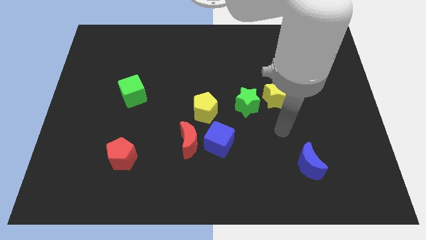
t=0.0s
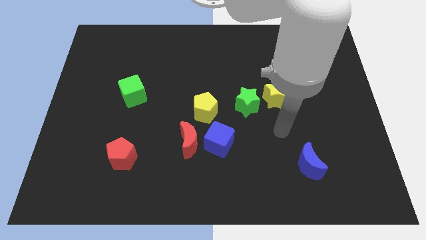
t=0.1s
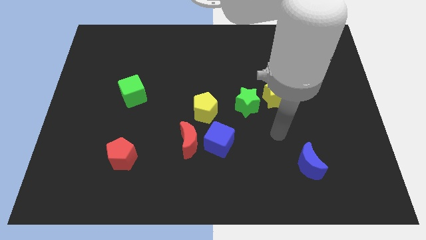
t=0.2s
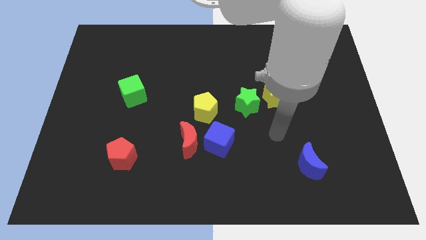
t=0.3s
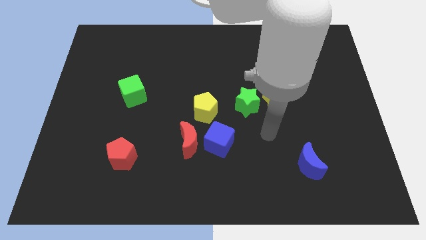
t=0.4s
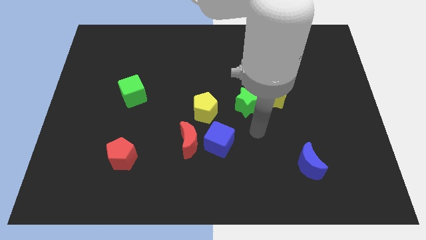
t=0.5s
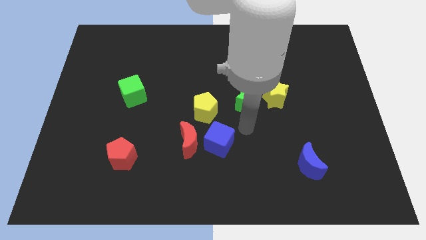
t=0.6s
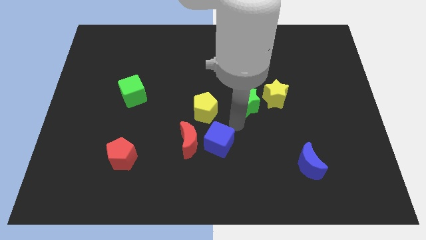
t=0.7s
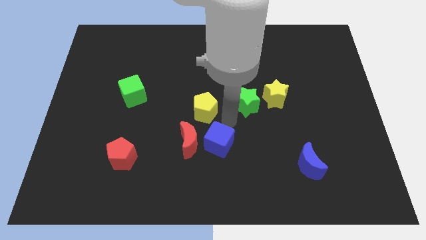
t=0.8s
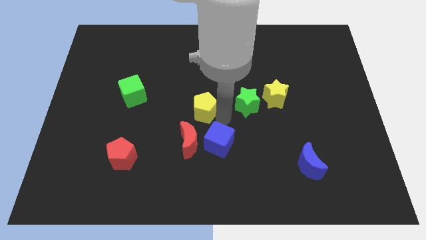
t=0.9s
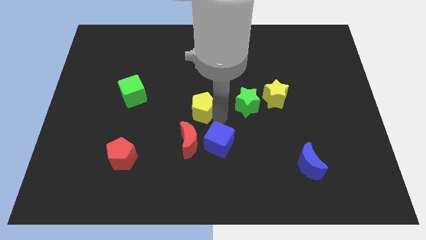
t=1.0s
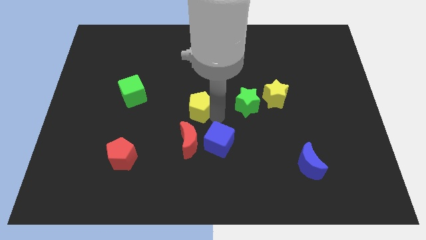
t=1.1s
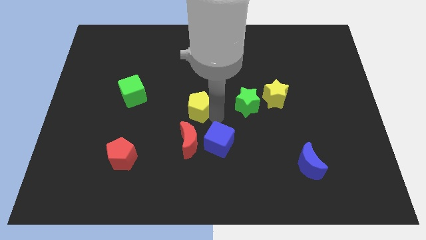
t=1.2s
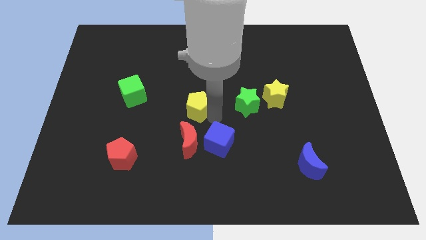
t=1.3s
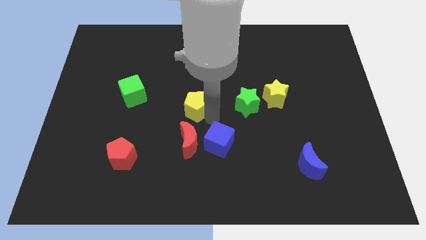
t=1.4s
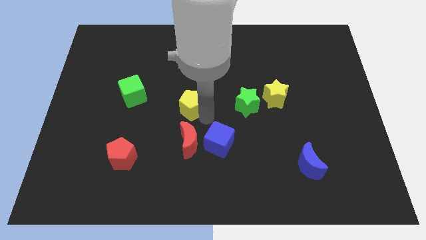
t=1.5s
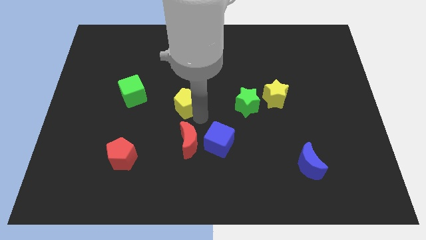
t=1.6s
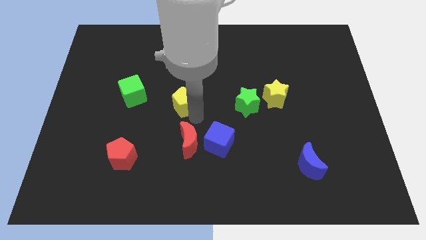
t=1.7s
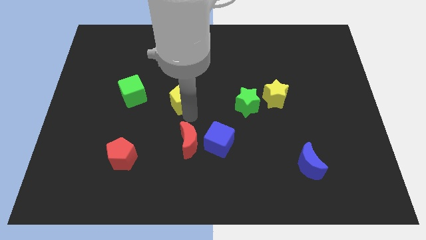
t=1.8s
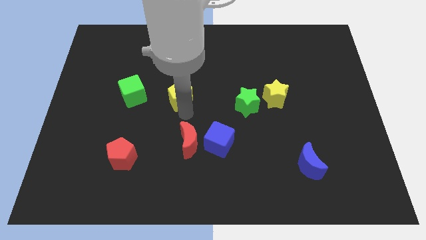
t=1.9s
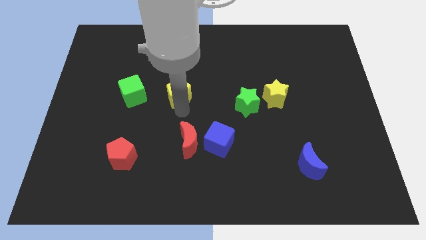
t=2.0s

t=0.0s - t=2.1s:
place the yellow pentagon vertically to the top of the red crescent

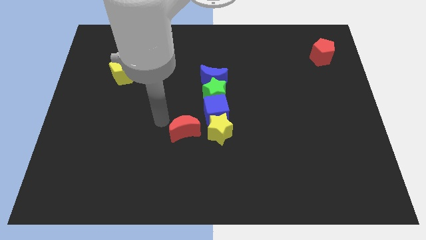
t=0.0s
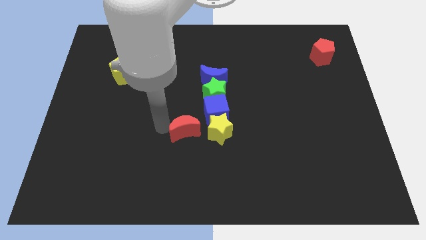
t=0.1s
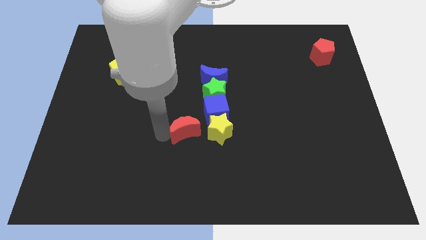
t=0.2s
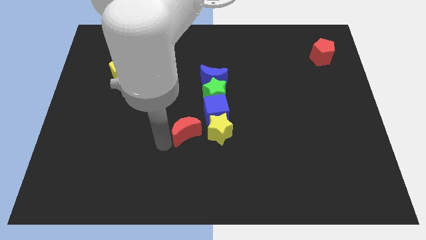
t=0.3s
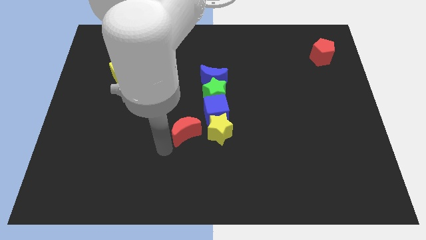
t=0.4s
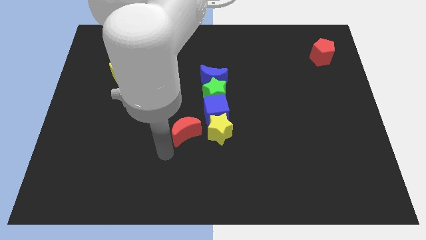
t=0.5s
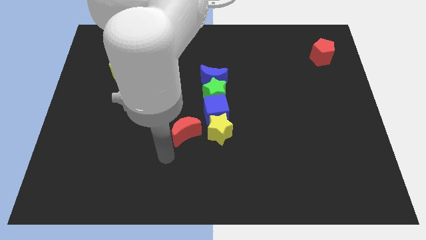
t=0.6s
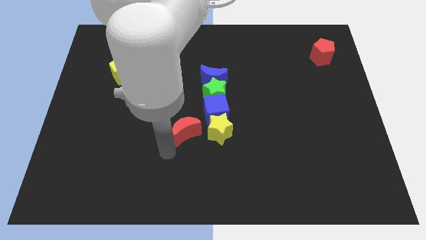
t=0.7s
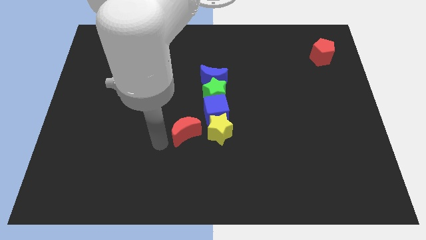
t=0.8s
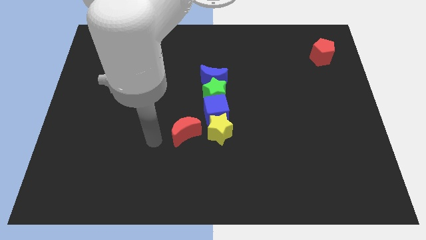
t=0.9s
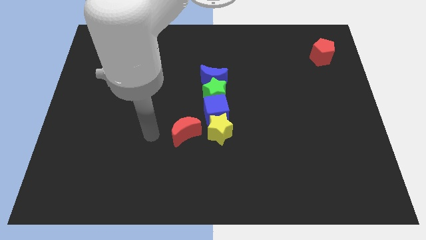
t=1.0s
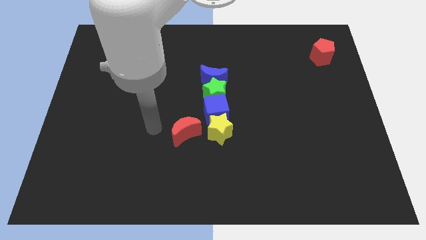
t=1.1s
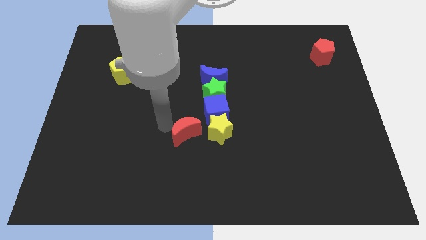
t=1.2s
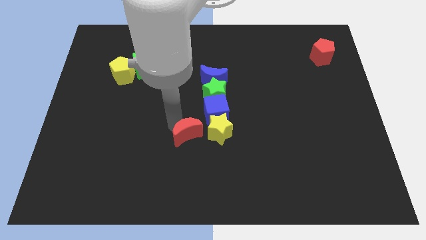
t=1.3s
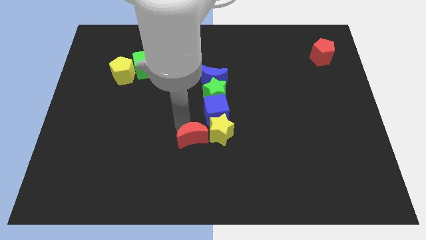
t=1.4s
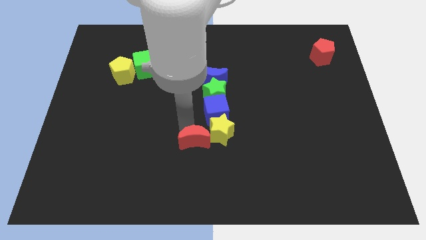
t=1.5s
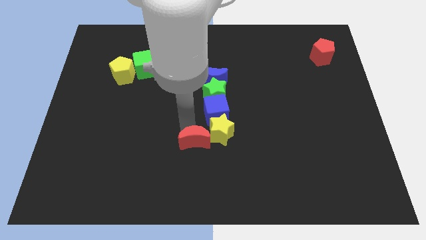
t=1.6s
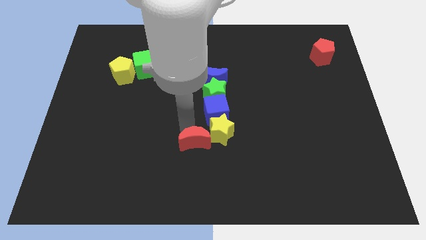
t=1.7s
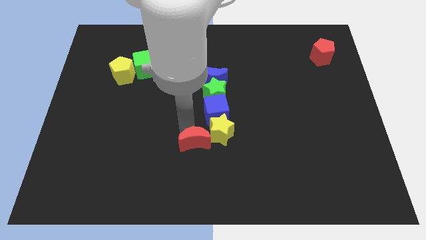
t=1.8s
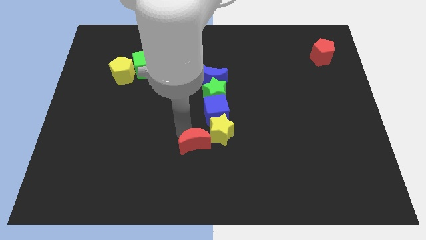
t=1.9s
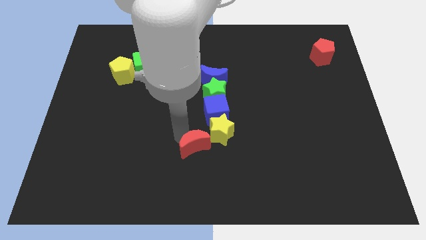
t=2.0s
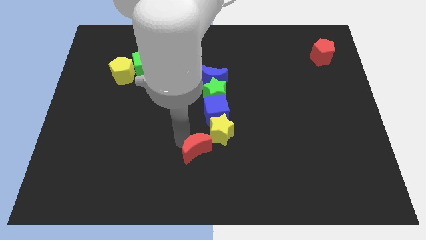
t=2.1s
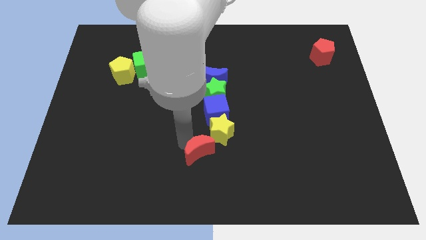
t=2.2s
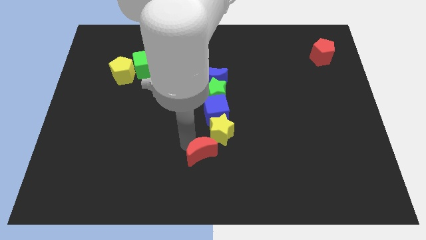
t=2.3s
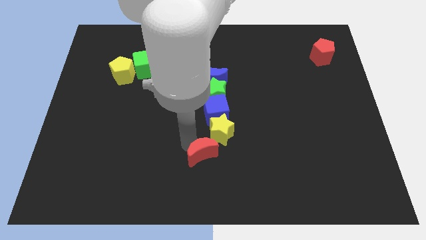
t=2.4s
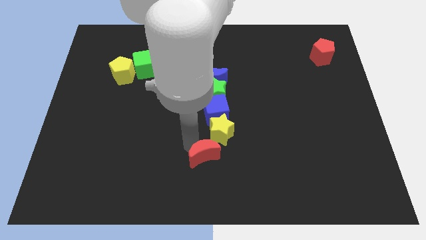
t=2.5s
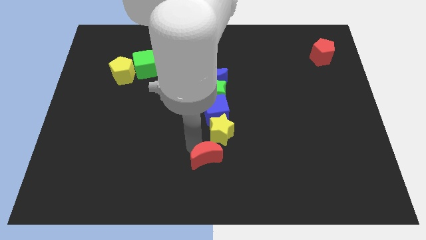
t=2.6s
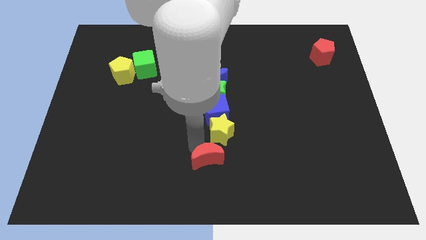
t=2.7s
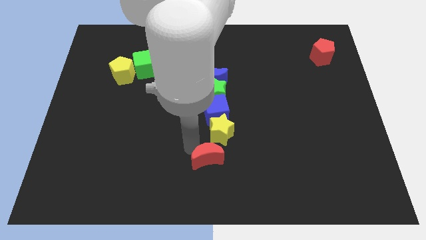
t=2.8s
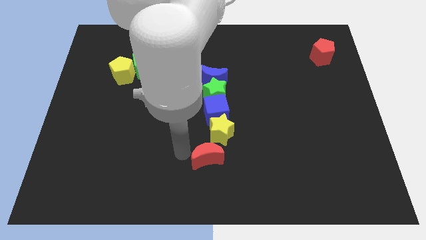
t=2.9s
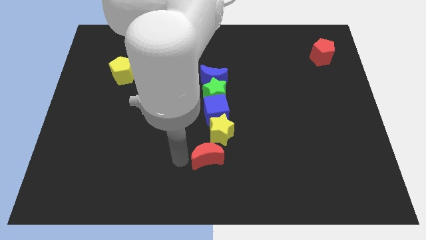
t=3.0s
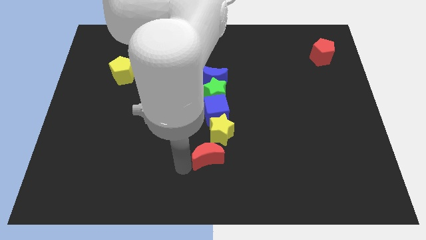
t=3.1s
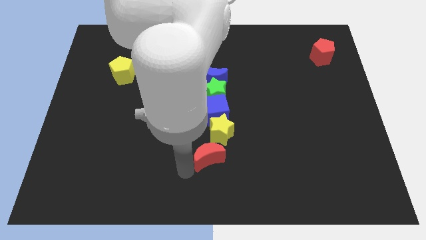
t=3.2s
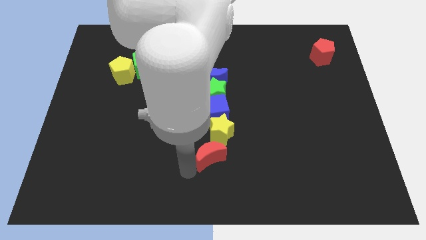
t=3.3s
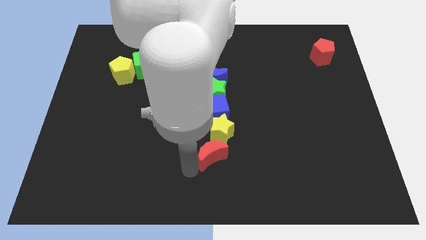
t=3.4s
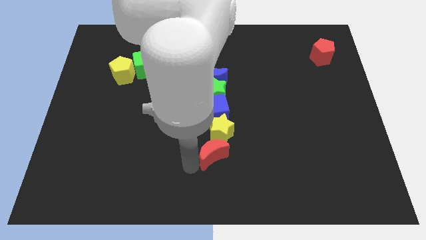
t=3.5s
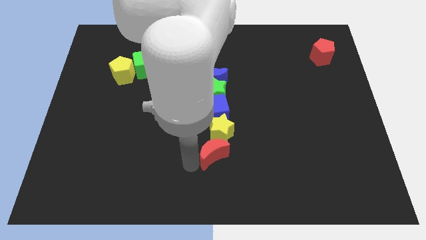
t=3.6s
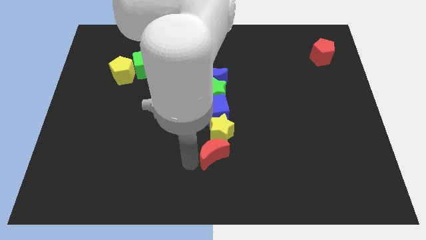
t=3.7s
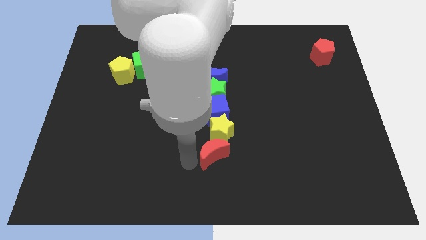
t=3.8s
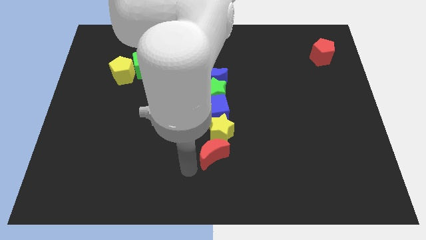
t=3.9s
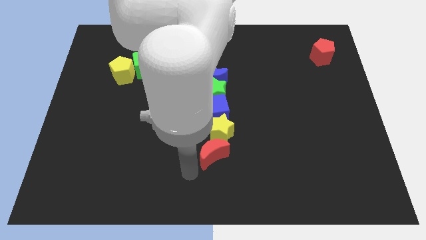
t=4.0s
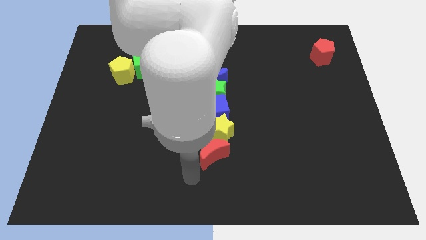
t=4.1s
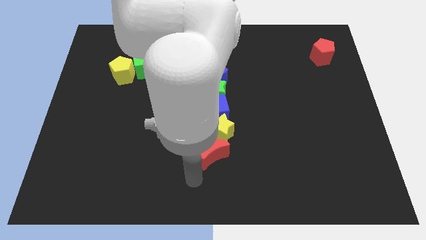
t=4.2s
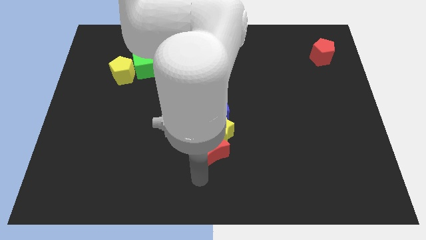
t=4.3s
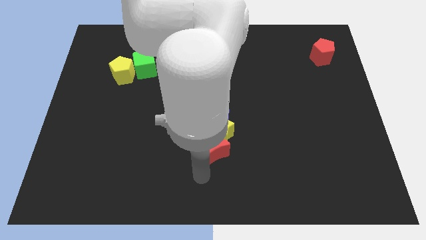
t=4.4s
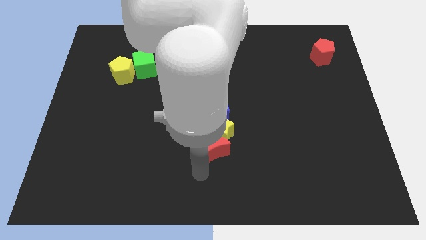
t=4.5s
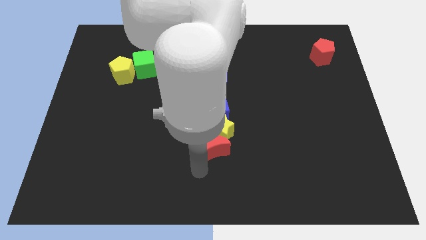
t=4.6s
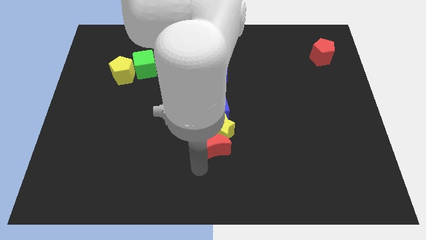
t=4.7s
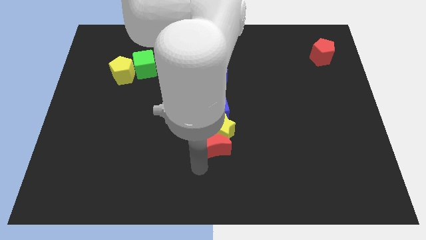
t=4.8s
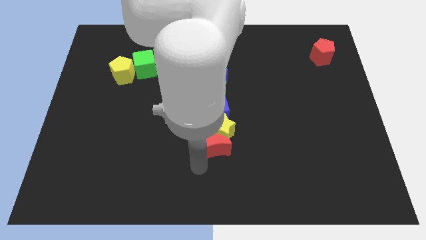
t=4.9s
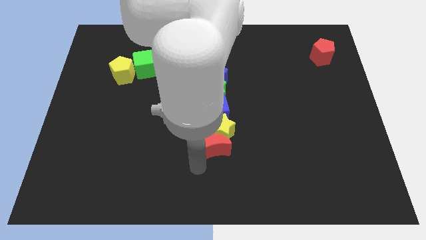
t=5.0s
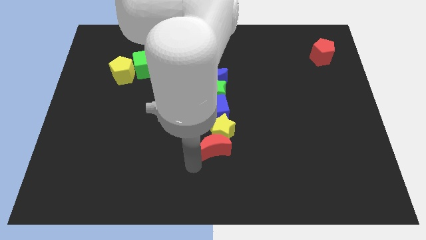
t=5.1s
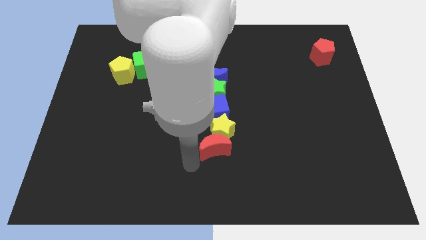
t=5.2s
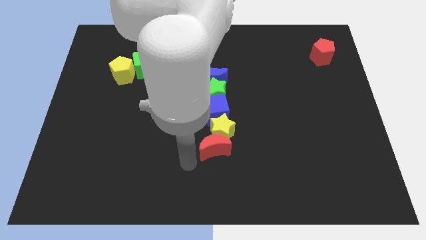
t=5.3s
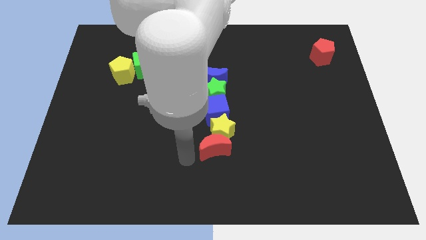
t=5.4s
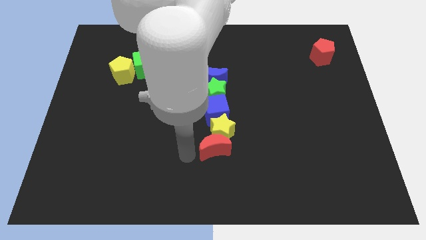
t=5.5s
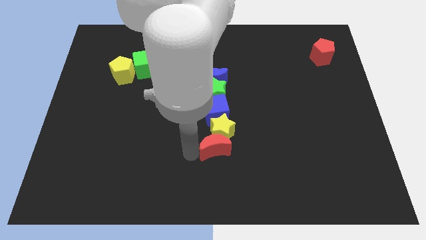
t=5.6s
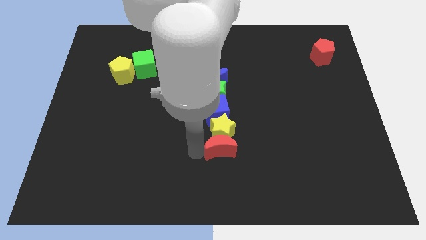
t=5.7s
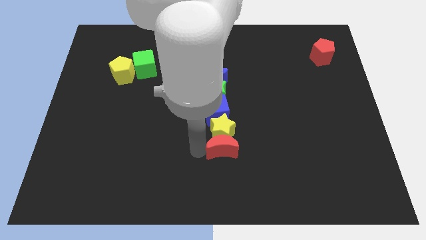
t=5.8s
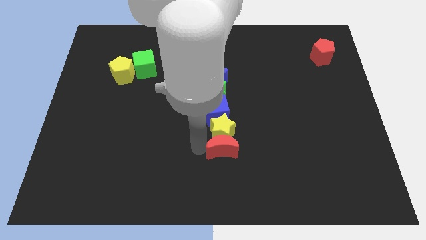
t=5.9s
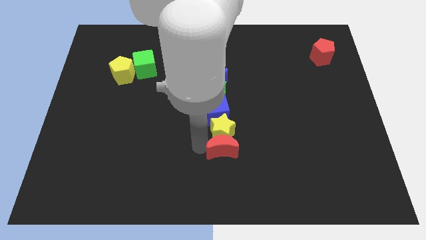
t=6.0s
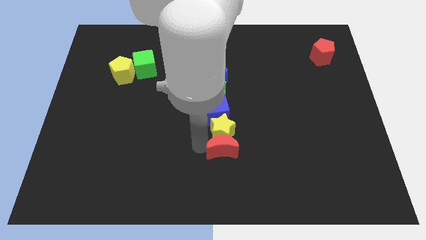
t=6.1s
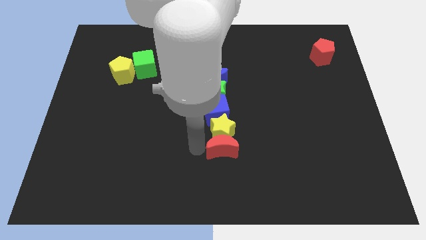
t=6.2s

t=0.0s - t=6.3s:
push the red crescent into the bottom of the yellow star

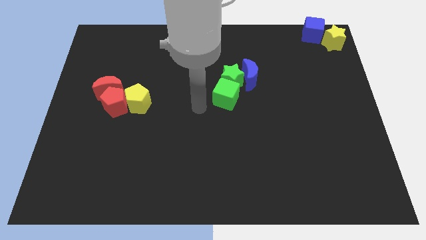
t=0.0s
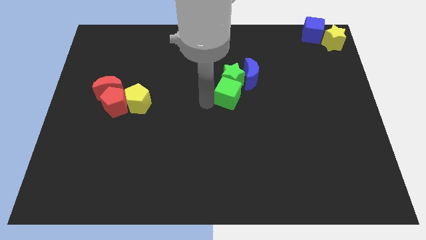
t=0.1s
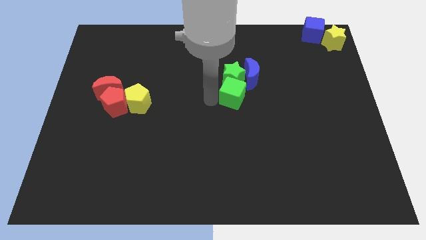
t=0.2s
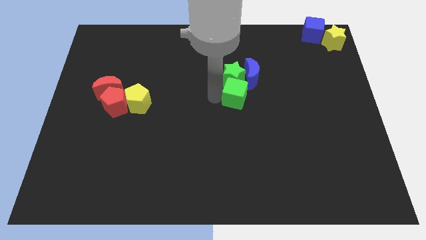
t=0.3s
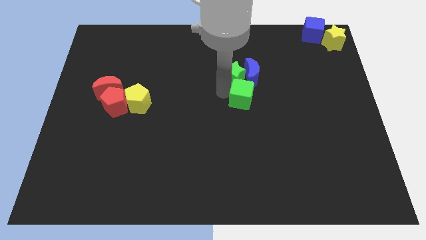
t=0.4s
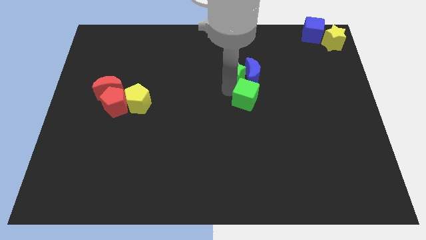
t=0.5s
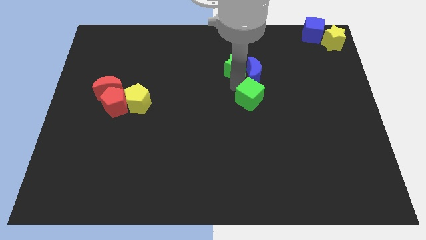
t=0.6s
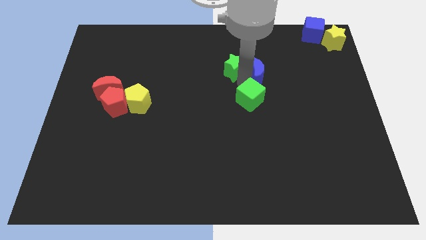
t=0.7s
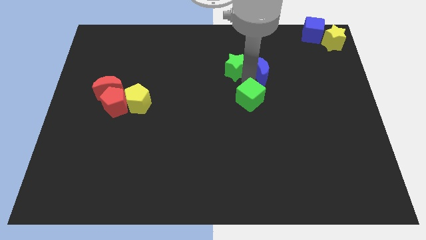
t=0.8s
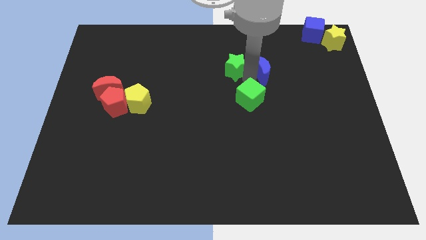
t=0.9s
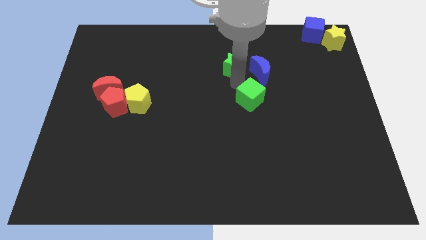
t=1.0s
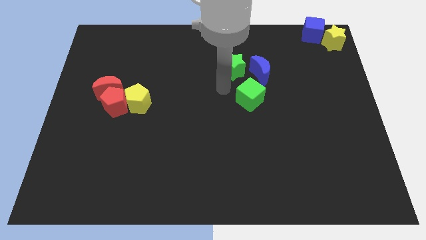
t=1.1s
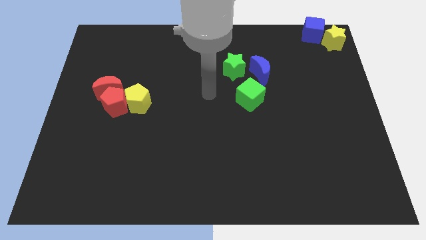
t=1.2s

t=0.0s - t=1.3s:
separate the green star green cube and blue moon from each other
